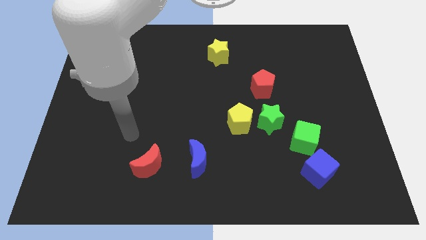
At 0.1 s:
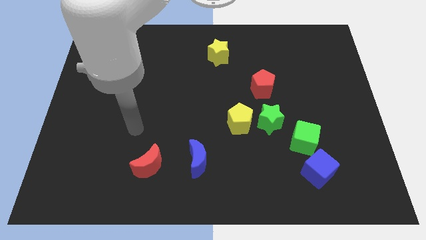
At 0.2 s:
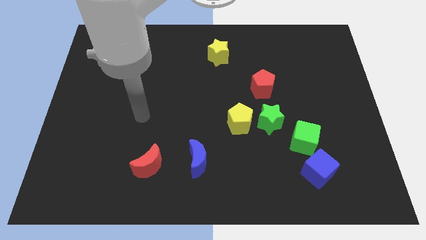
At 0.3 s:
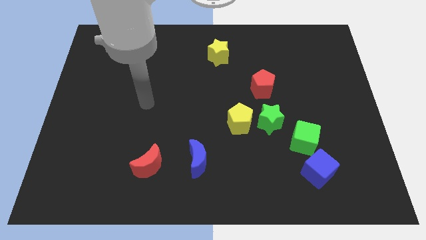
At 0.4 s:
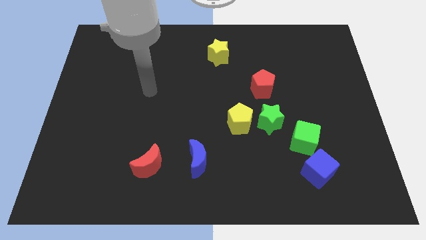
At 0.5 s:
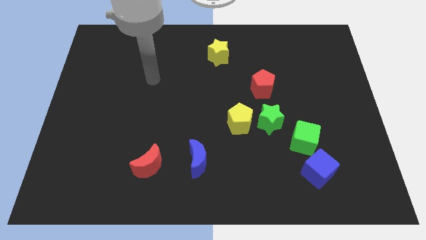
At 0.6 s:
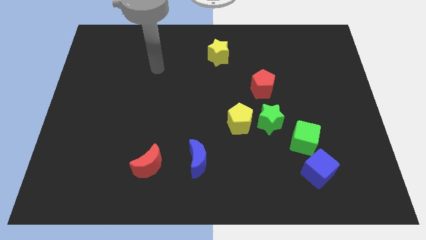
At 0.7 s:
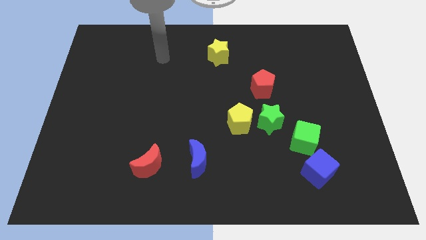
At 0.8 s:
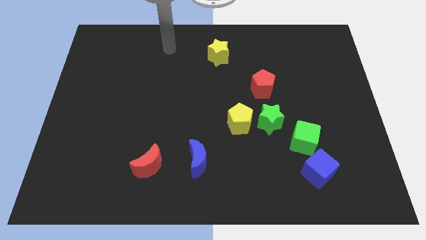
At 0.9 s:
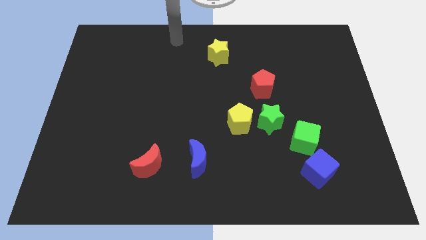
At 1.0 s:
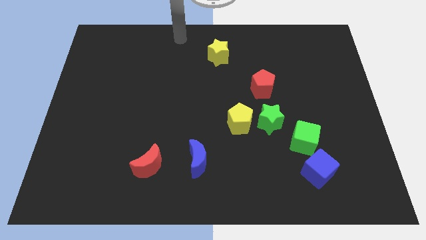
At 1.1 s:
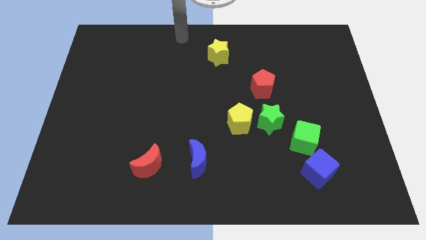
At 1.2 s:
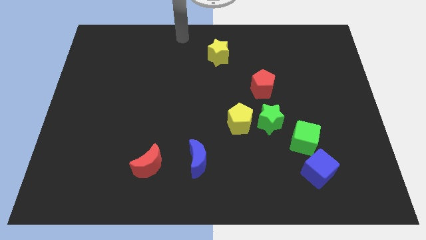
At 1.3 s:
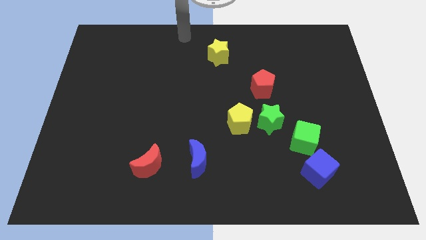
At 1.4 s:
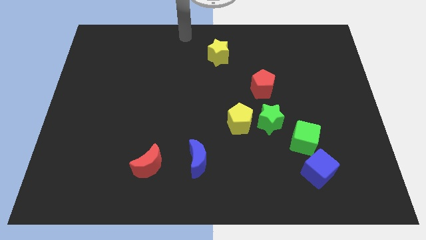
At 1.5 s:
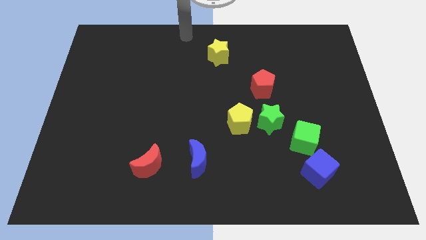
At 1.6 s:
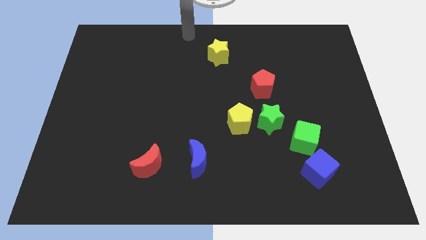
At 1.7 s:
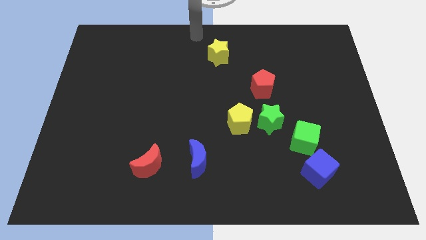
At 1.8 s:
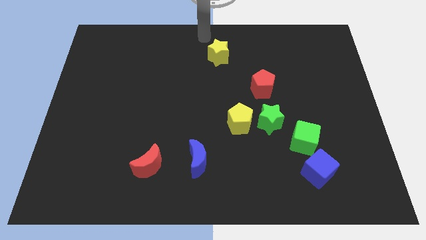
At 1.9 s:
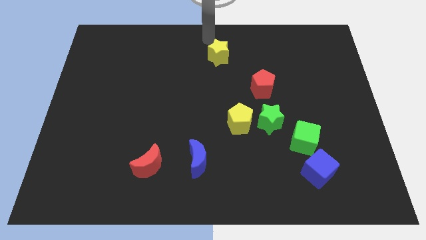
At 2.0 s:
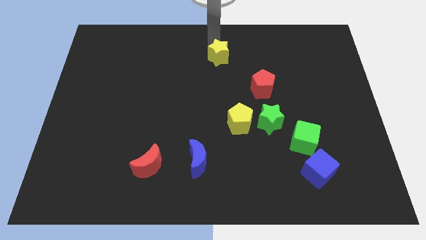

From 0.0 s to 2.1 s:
go to the top side of the yellow star

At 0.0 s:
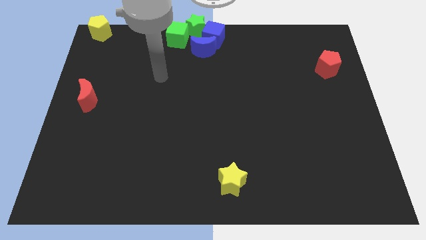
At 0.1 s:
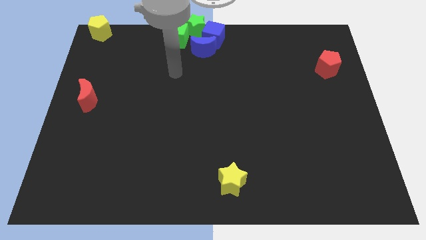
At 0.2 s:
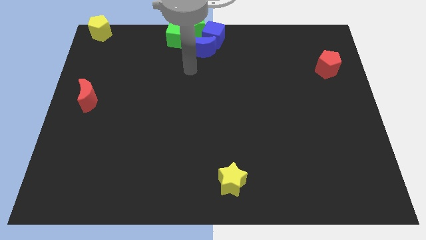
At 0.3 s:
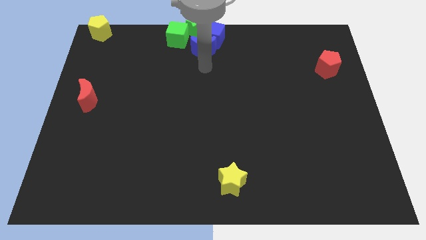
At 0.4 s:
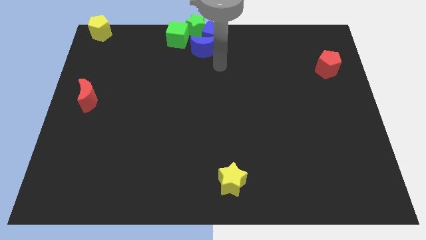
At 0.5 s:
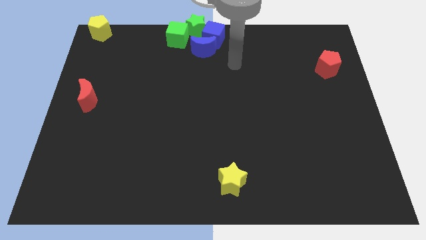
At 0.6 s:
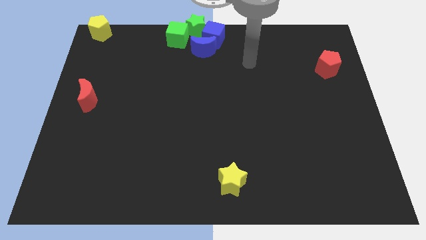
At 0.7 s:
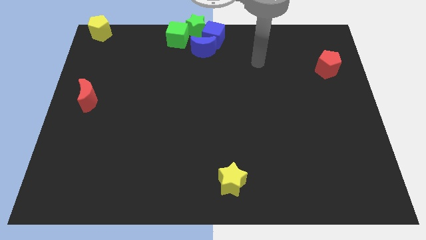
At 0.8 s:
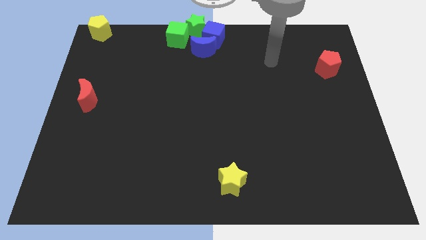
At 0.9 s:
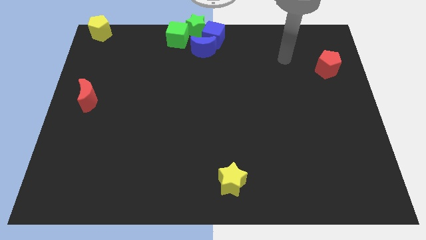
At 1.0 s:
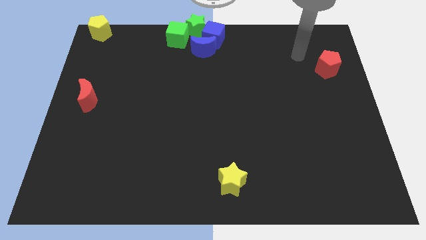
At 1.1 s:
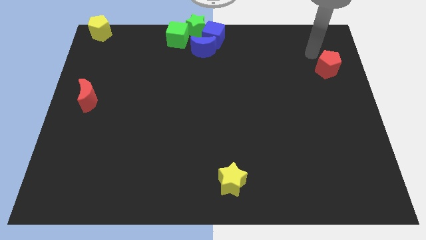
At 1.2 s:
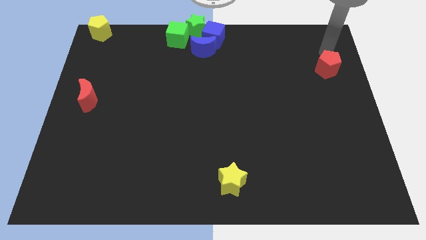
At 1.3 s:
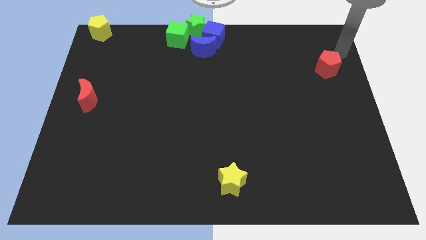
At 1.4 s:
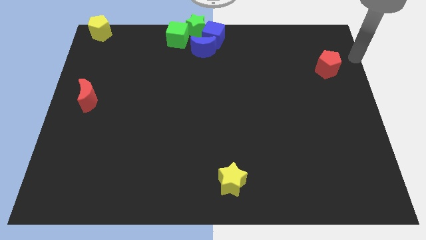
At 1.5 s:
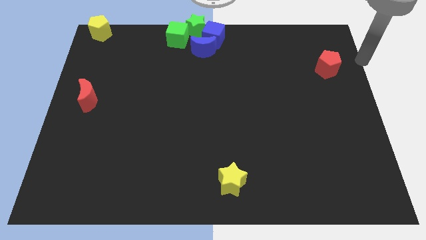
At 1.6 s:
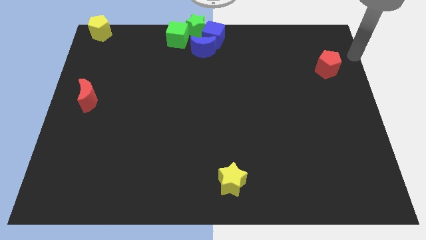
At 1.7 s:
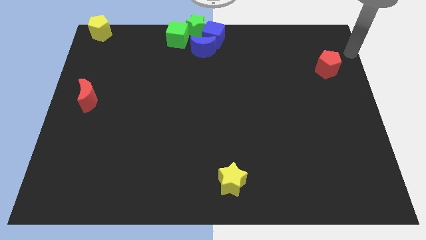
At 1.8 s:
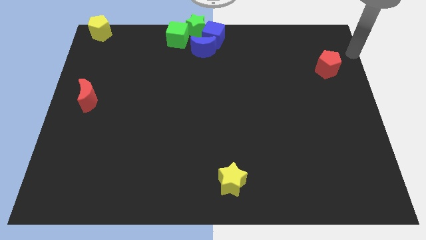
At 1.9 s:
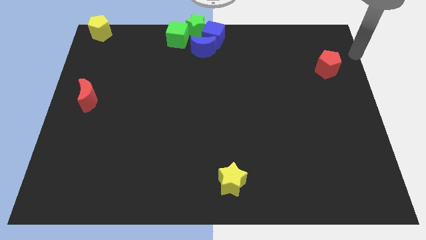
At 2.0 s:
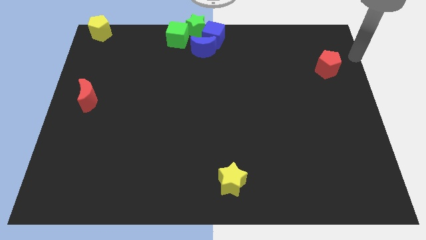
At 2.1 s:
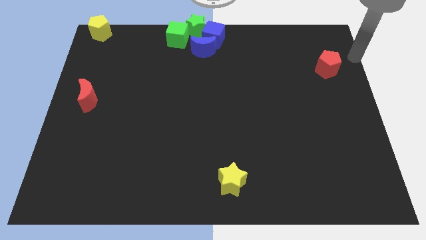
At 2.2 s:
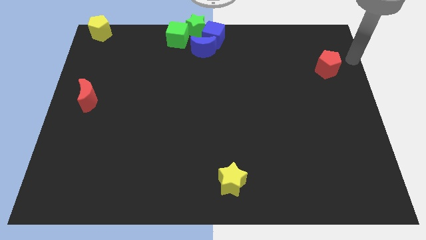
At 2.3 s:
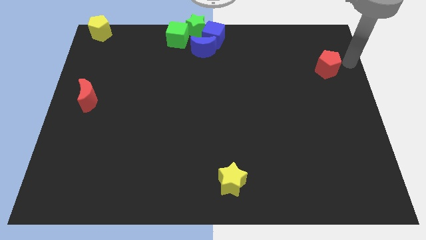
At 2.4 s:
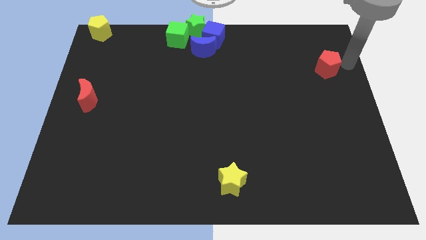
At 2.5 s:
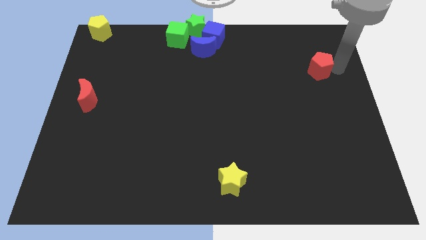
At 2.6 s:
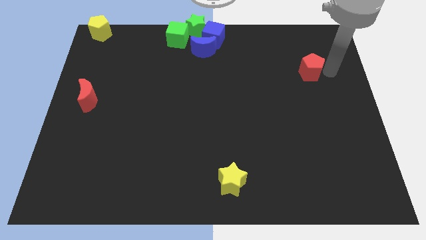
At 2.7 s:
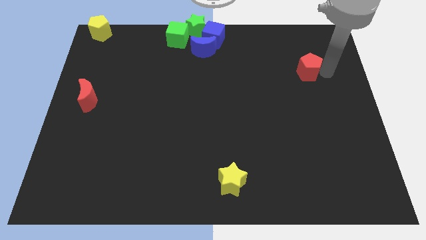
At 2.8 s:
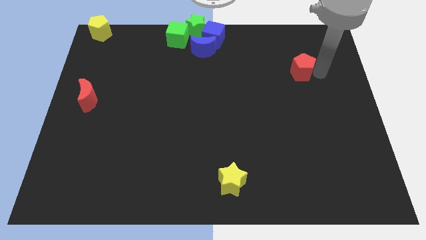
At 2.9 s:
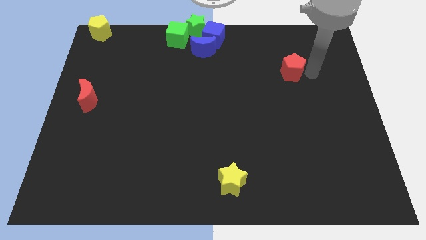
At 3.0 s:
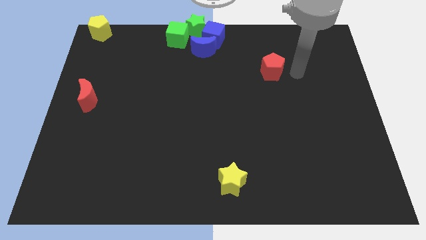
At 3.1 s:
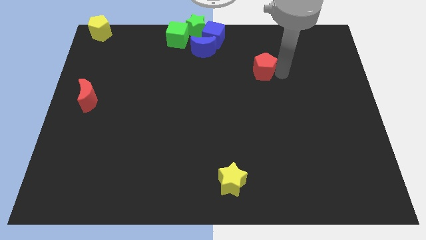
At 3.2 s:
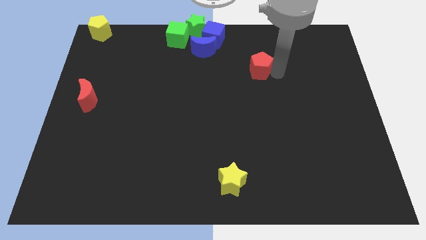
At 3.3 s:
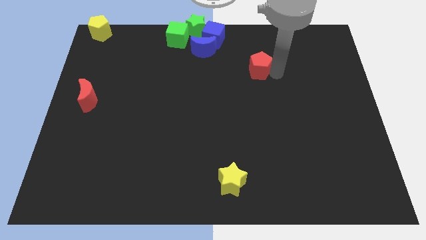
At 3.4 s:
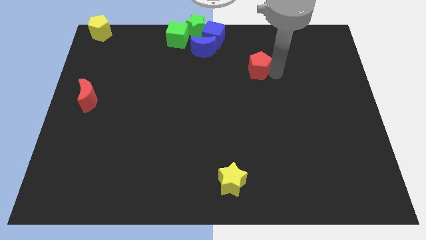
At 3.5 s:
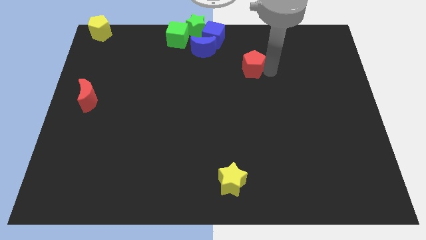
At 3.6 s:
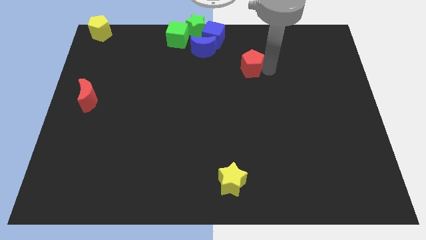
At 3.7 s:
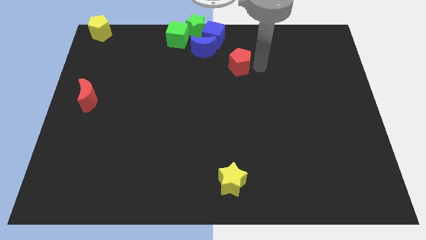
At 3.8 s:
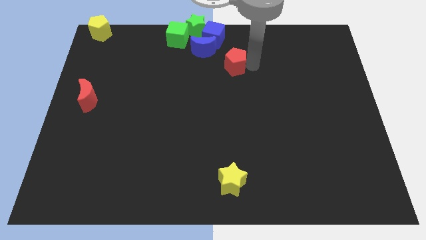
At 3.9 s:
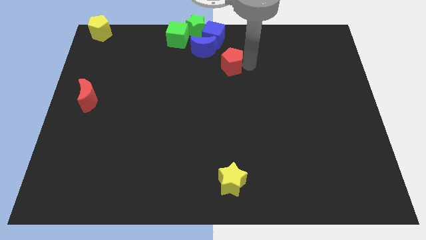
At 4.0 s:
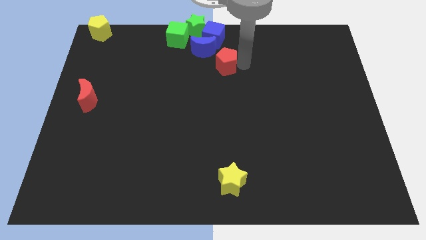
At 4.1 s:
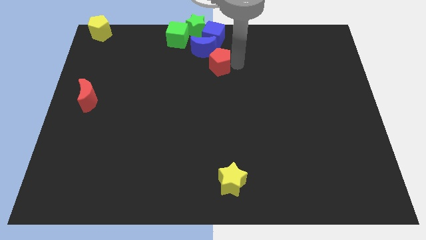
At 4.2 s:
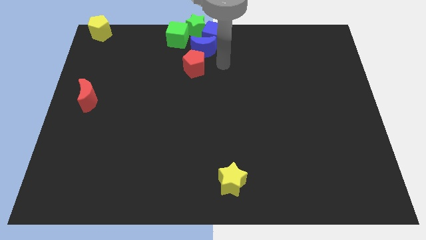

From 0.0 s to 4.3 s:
move the red pentagon to the bottom right side of the blue crescent

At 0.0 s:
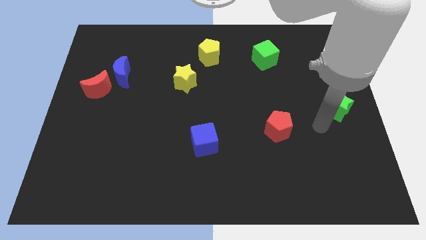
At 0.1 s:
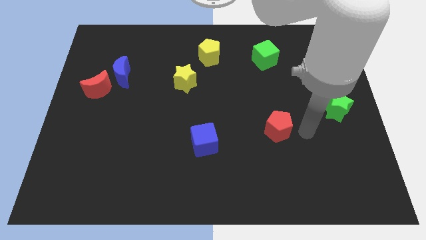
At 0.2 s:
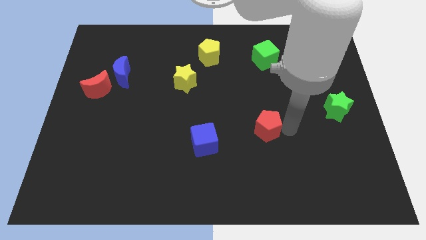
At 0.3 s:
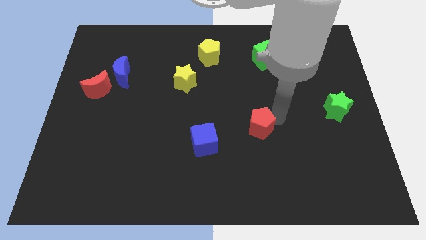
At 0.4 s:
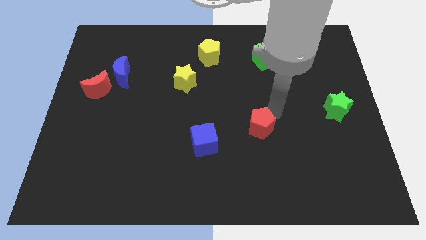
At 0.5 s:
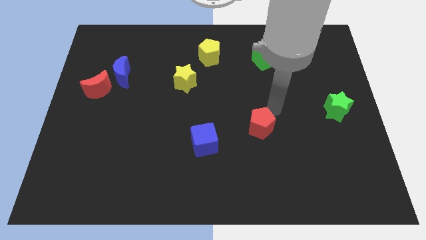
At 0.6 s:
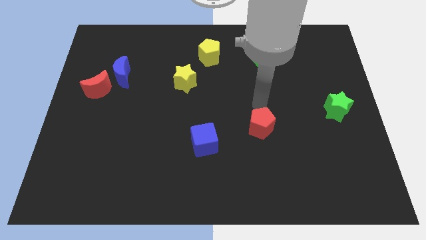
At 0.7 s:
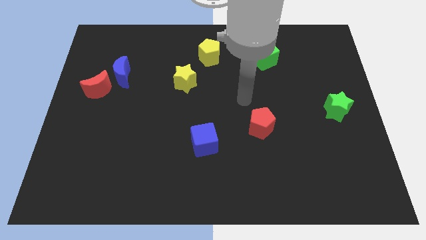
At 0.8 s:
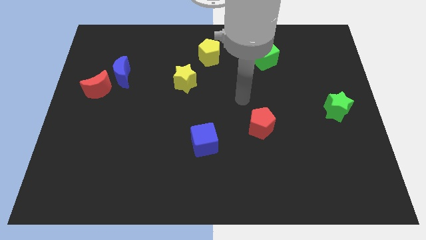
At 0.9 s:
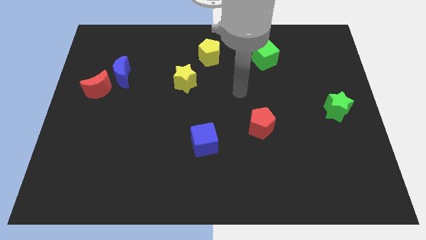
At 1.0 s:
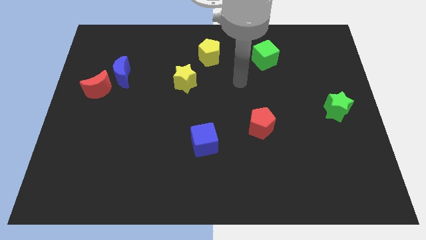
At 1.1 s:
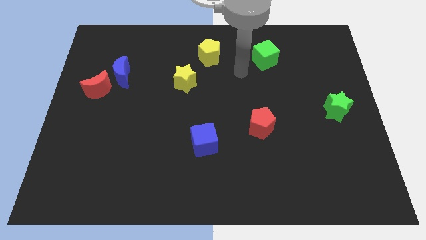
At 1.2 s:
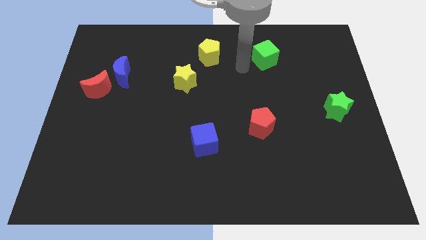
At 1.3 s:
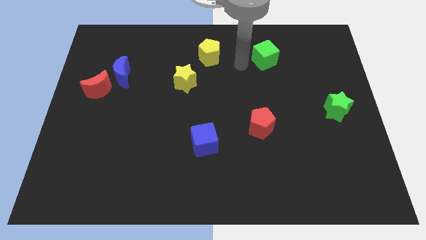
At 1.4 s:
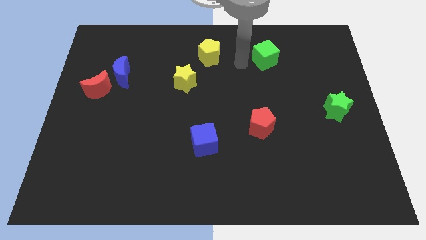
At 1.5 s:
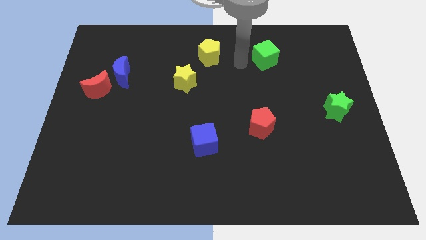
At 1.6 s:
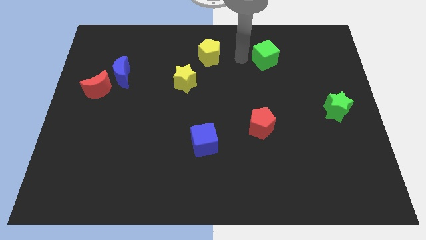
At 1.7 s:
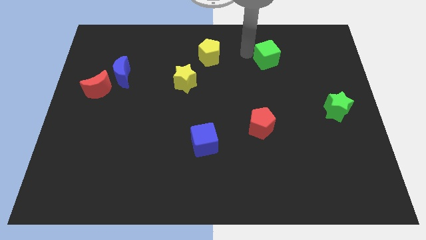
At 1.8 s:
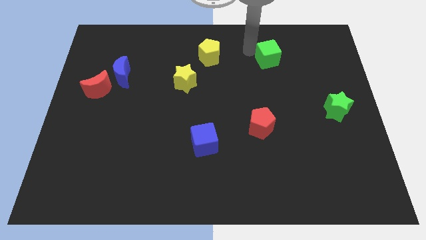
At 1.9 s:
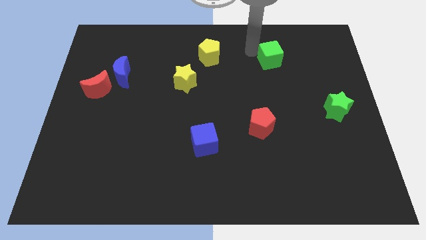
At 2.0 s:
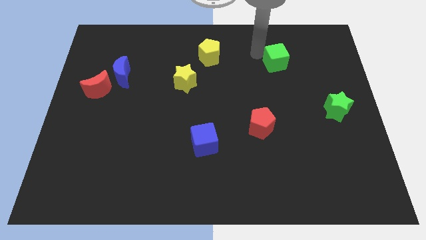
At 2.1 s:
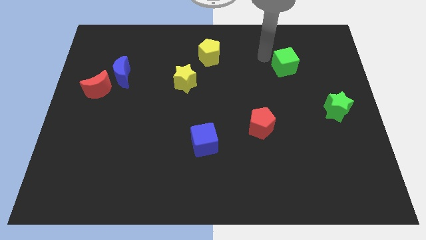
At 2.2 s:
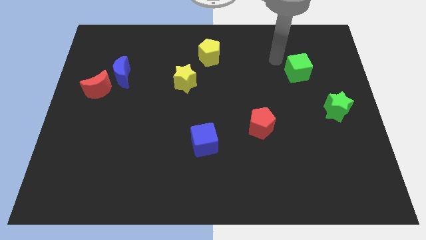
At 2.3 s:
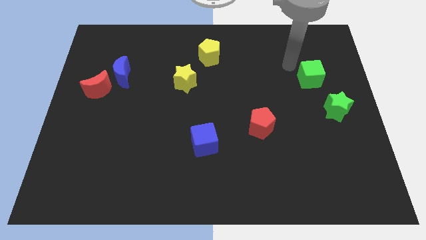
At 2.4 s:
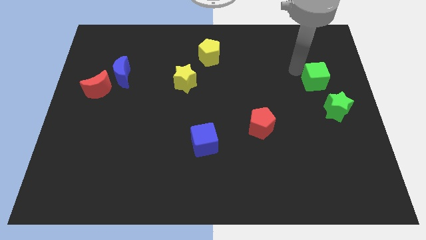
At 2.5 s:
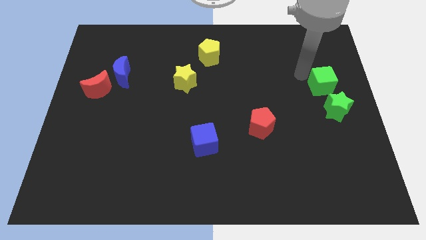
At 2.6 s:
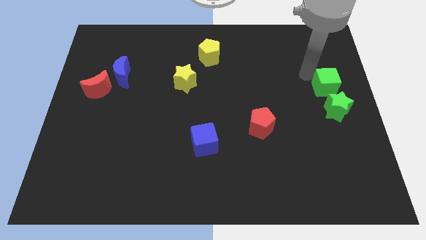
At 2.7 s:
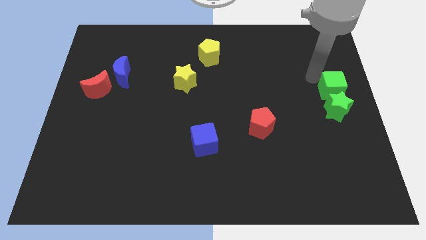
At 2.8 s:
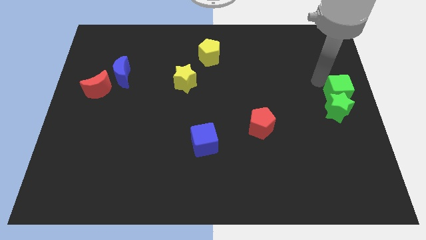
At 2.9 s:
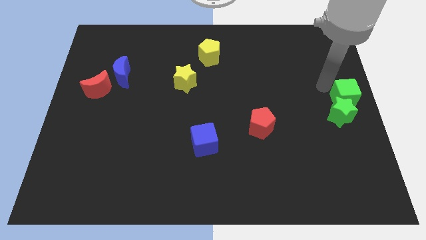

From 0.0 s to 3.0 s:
place the red pentagon and the green cube in a diagonal line
